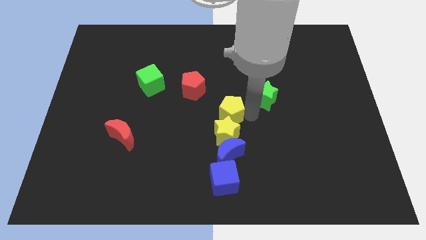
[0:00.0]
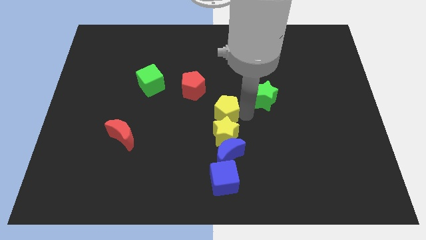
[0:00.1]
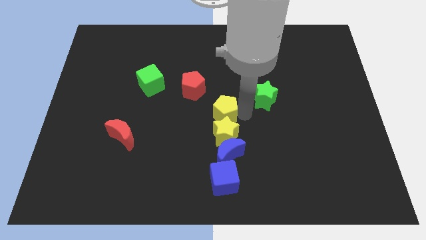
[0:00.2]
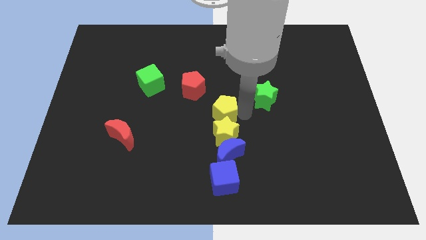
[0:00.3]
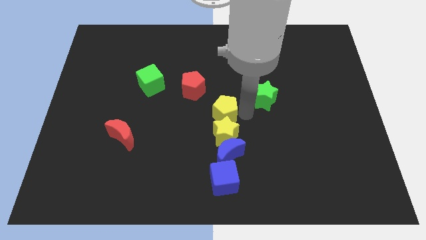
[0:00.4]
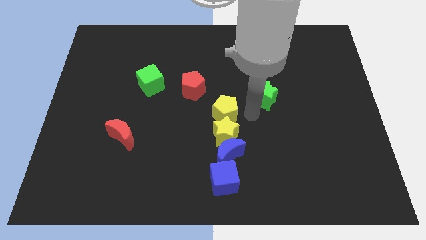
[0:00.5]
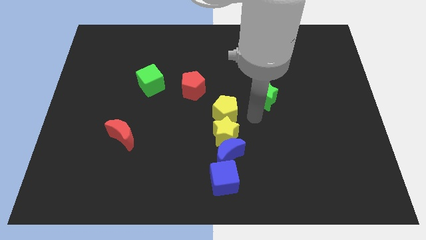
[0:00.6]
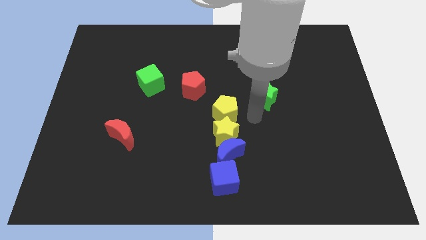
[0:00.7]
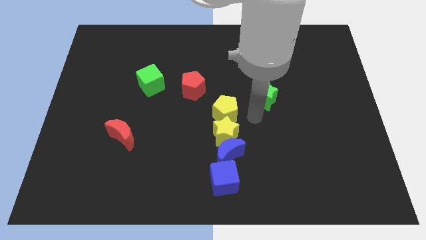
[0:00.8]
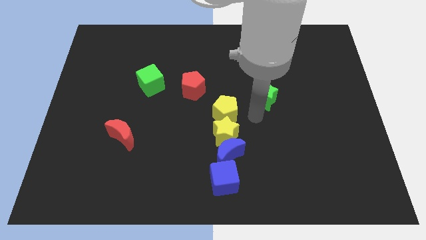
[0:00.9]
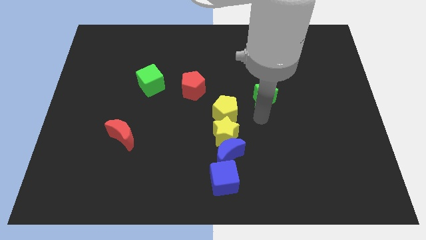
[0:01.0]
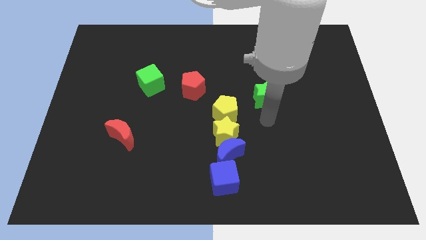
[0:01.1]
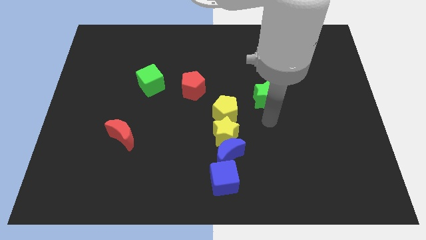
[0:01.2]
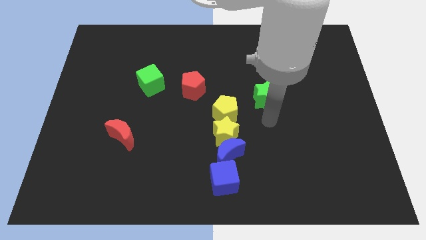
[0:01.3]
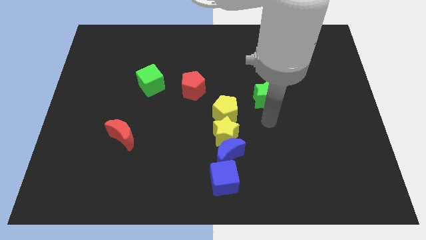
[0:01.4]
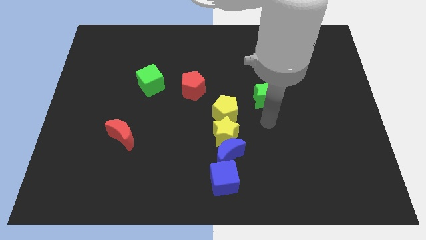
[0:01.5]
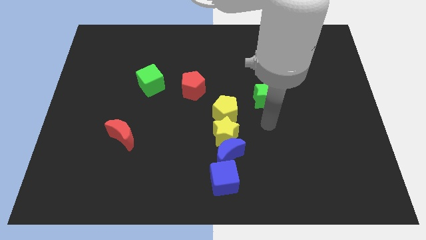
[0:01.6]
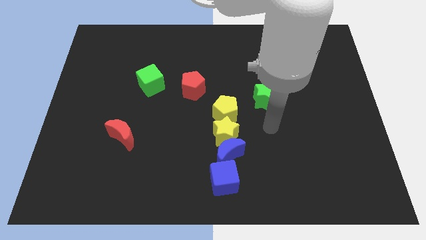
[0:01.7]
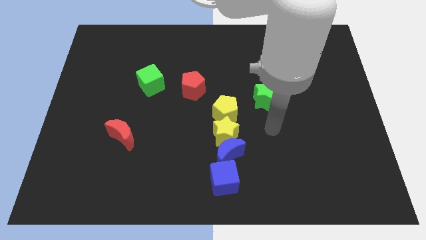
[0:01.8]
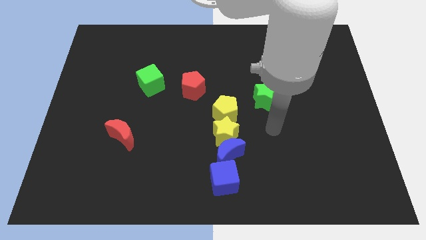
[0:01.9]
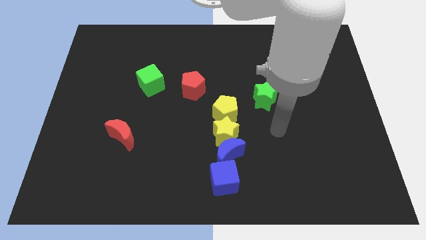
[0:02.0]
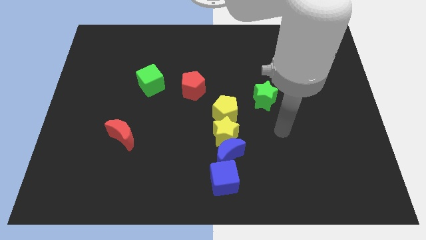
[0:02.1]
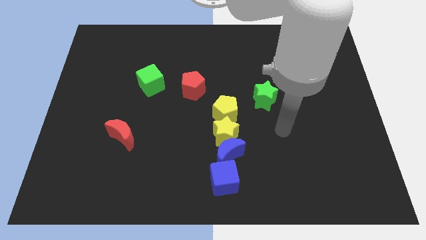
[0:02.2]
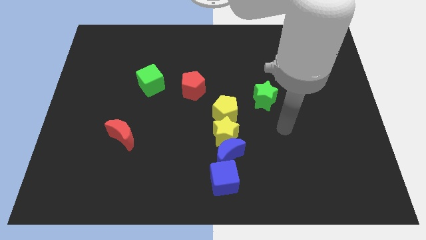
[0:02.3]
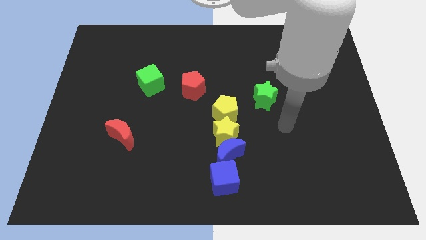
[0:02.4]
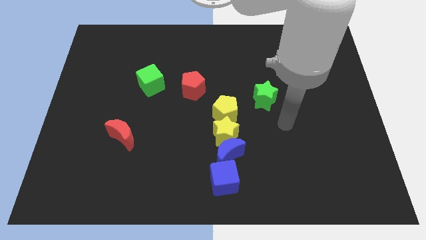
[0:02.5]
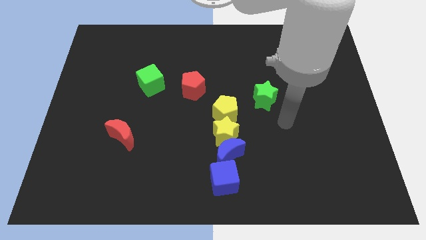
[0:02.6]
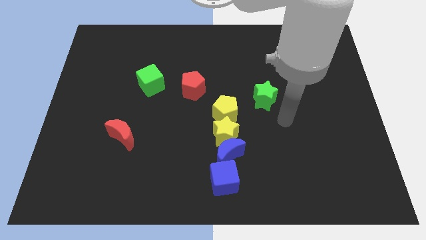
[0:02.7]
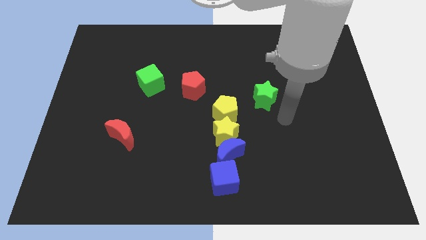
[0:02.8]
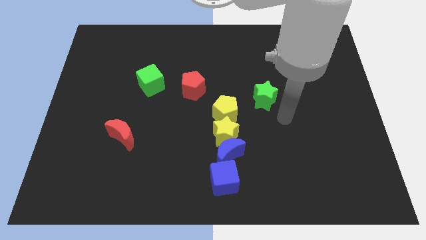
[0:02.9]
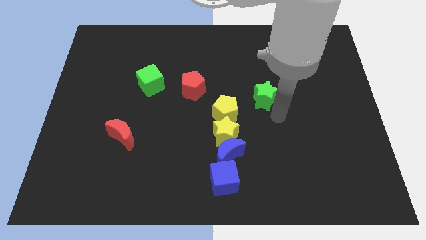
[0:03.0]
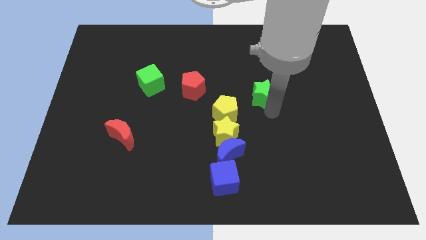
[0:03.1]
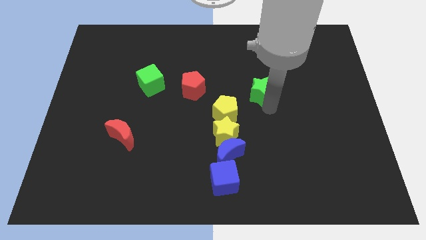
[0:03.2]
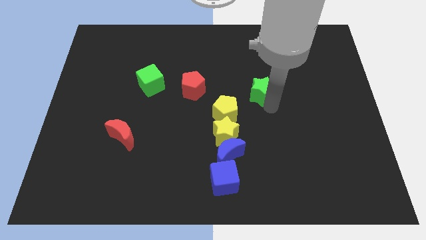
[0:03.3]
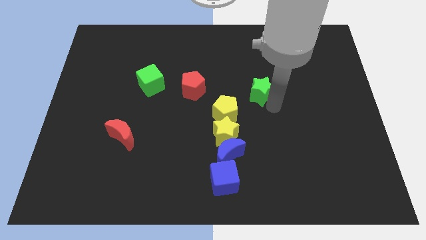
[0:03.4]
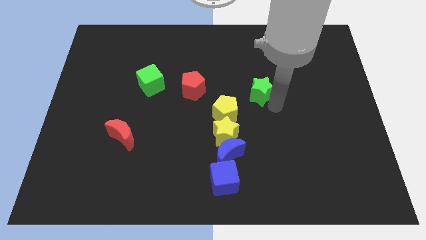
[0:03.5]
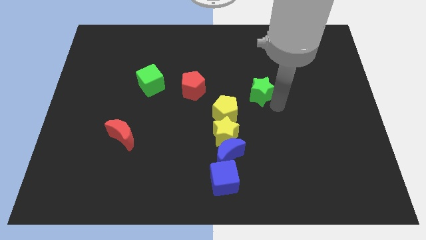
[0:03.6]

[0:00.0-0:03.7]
move your hand to the right of the green star

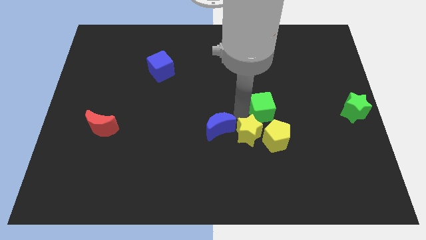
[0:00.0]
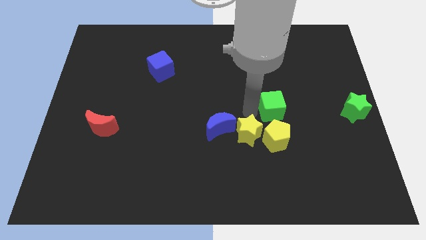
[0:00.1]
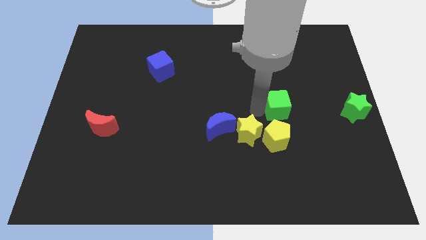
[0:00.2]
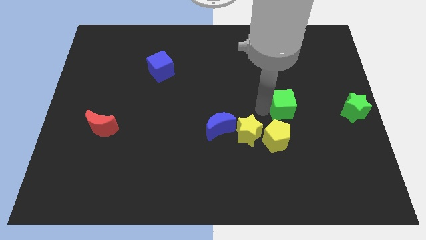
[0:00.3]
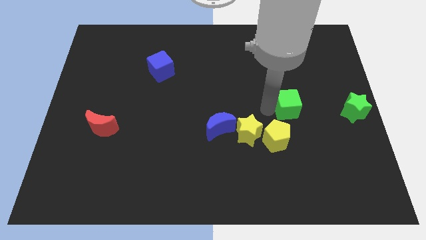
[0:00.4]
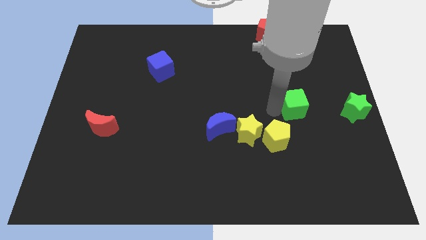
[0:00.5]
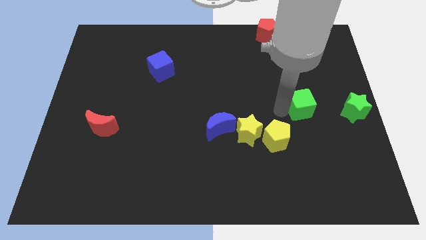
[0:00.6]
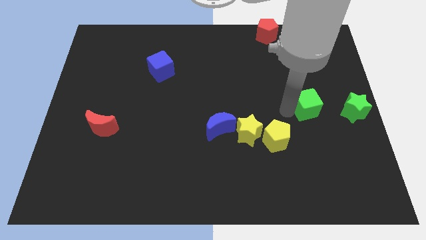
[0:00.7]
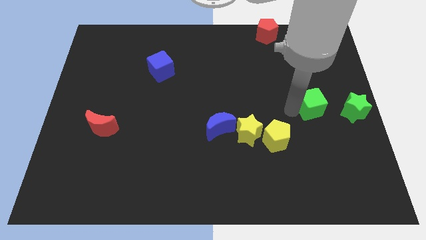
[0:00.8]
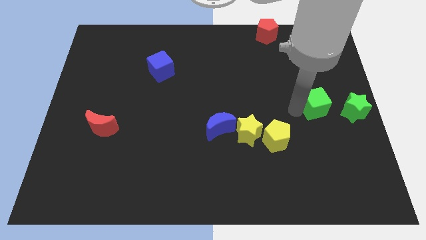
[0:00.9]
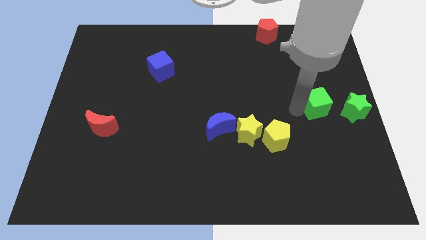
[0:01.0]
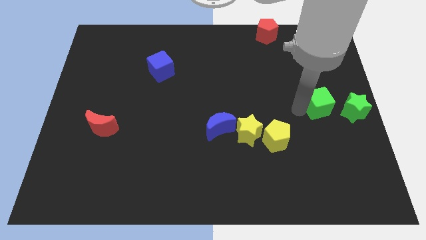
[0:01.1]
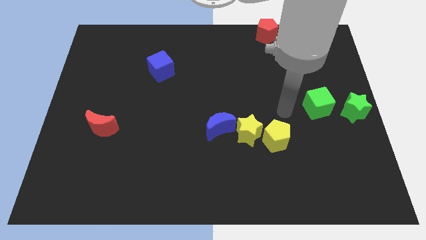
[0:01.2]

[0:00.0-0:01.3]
slide the green cube close to the green star

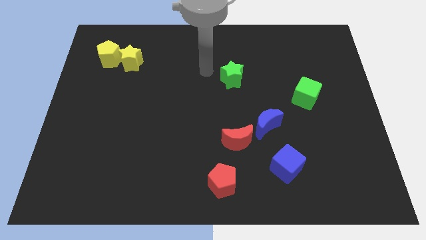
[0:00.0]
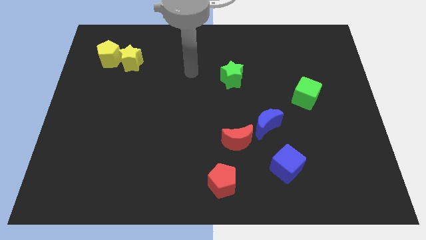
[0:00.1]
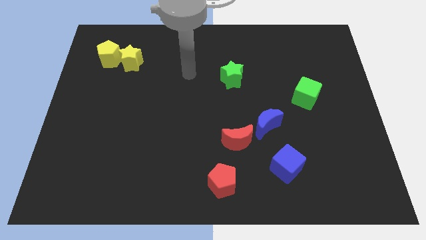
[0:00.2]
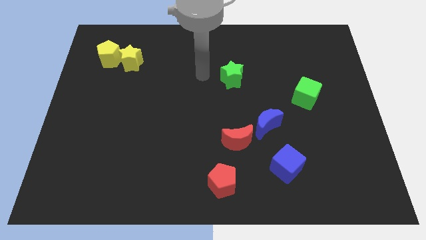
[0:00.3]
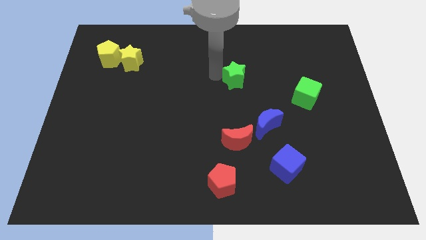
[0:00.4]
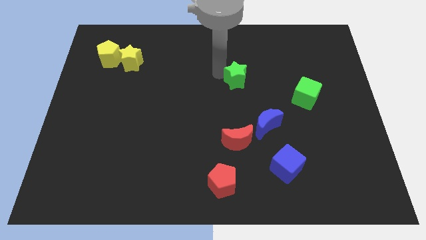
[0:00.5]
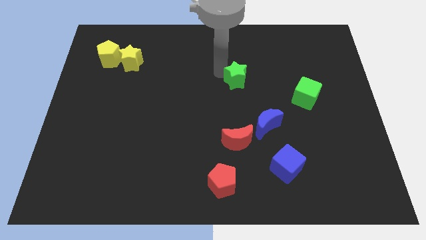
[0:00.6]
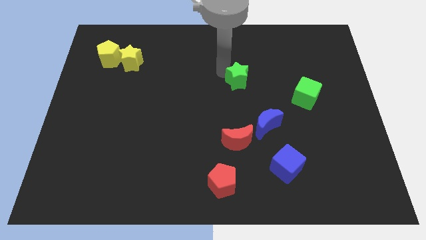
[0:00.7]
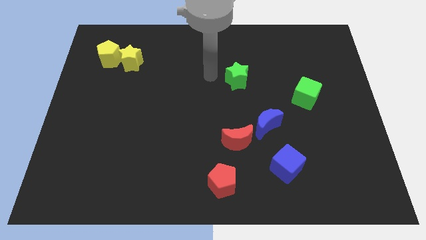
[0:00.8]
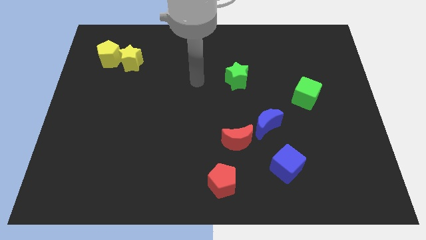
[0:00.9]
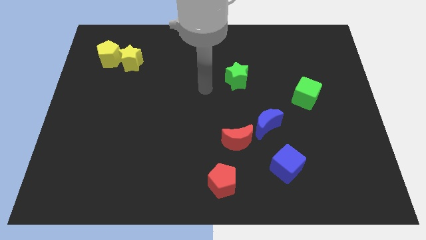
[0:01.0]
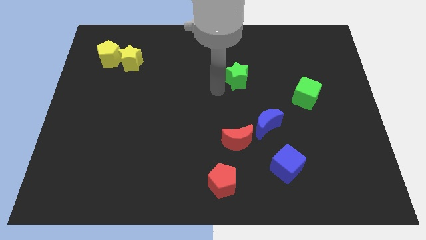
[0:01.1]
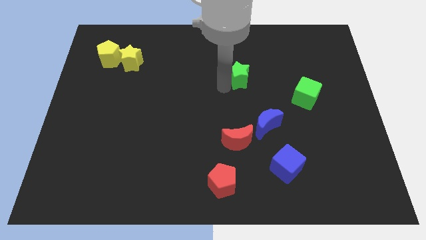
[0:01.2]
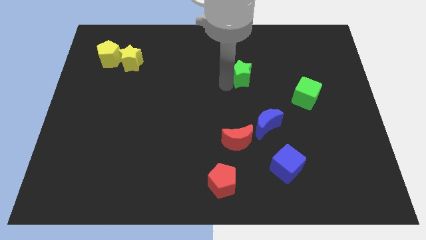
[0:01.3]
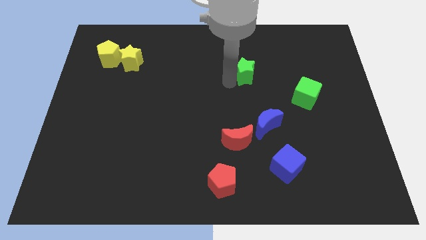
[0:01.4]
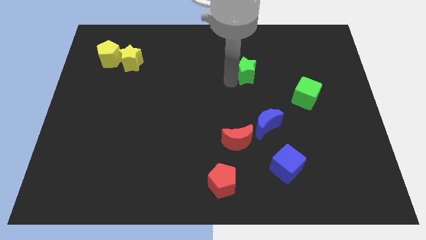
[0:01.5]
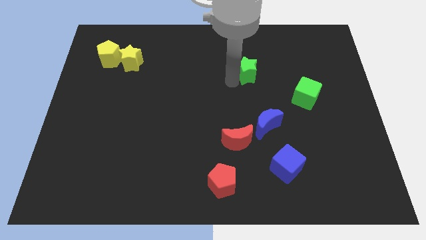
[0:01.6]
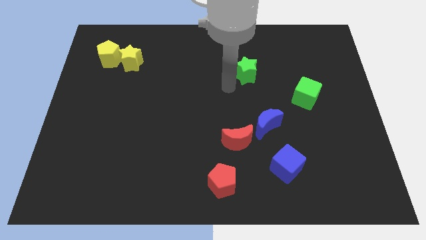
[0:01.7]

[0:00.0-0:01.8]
push the green star towards right

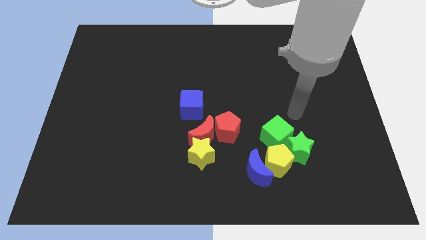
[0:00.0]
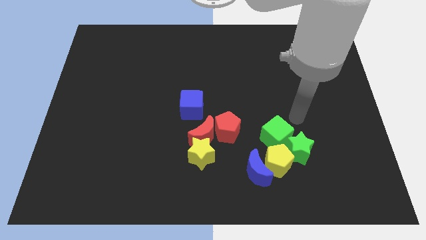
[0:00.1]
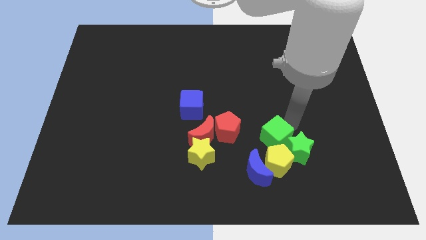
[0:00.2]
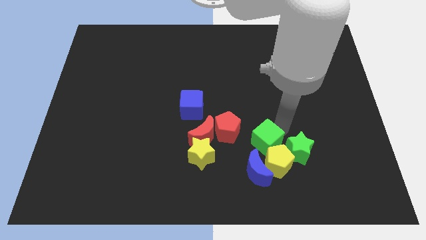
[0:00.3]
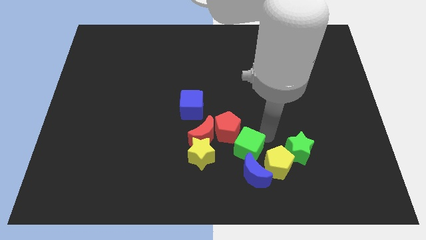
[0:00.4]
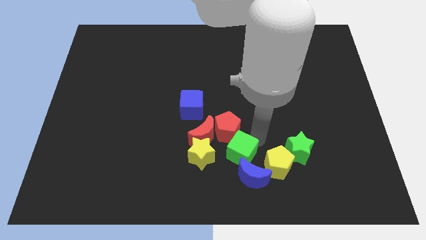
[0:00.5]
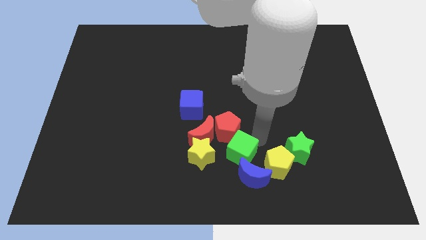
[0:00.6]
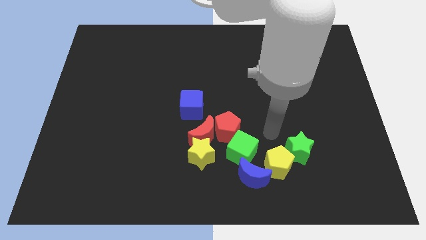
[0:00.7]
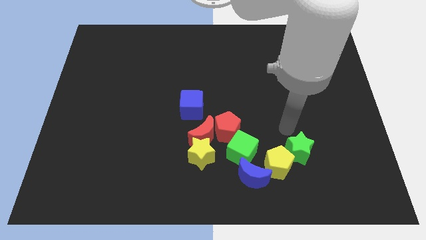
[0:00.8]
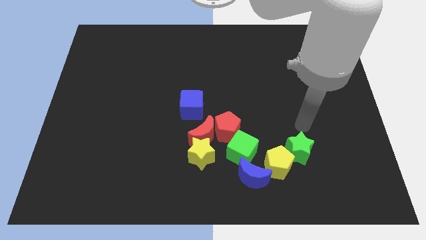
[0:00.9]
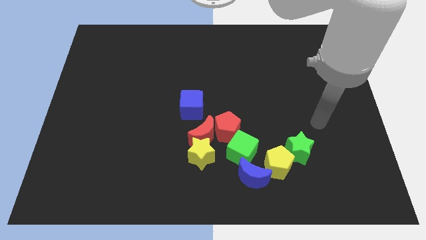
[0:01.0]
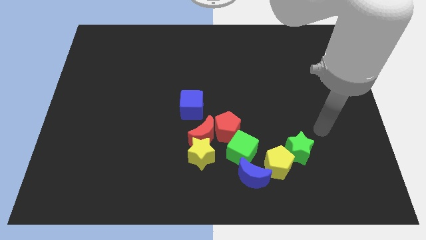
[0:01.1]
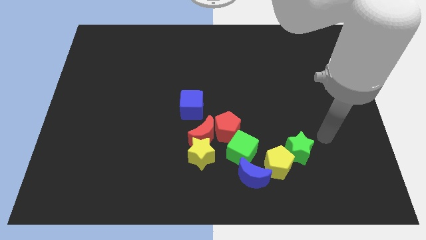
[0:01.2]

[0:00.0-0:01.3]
place the green cube in between the red pentagon and blue crescent to form a diagnoal line

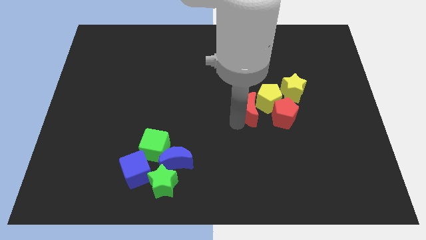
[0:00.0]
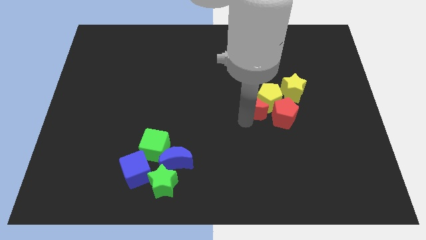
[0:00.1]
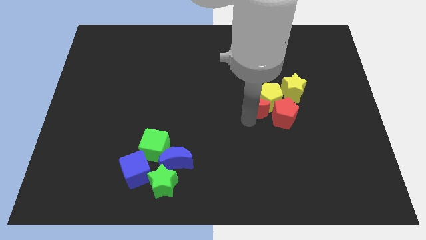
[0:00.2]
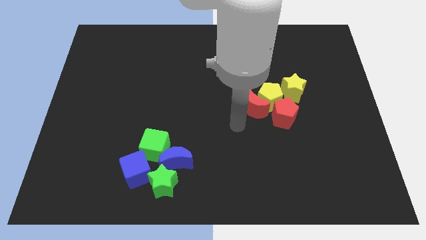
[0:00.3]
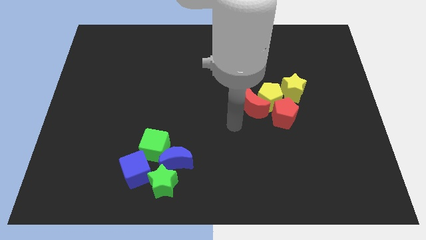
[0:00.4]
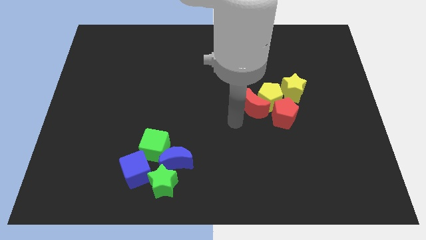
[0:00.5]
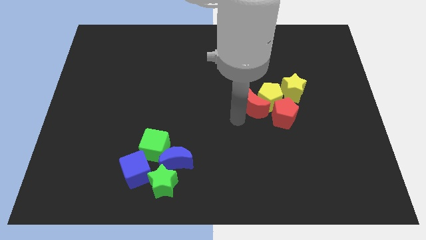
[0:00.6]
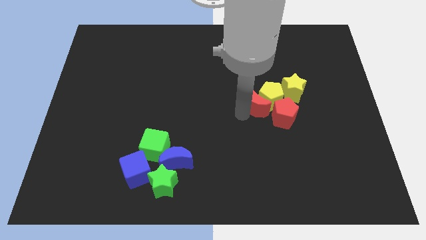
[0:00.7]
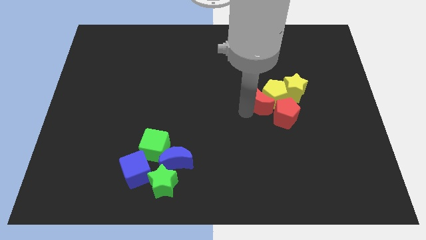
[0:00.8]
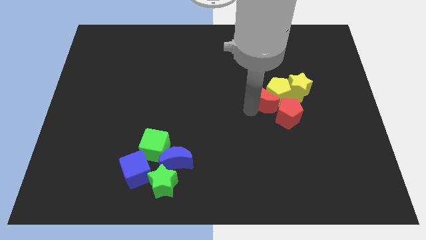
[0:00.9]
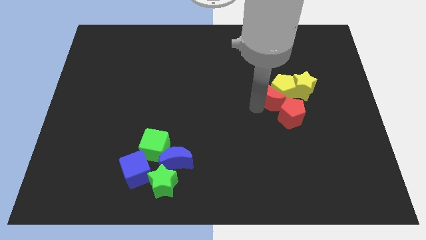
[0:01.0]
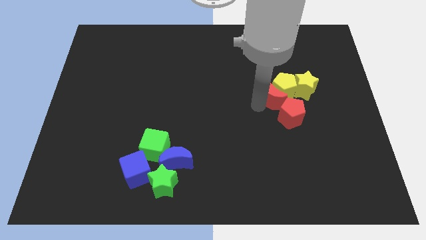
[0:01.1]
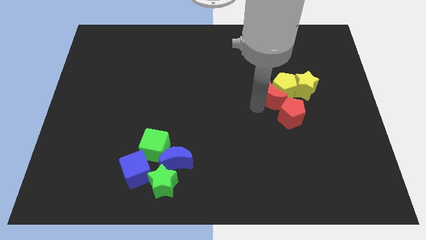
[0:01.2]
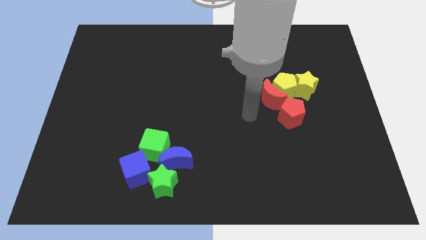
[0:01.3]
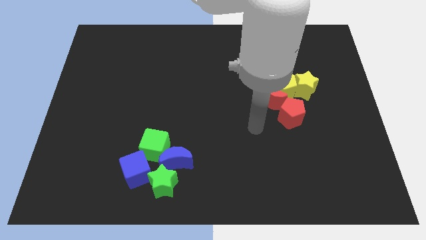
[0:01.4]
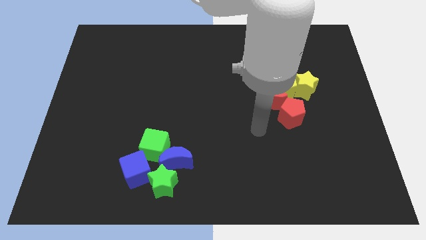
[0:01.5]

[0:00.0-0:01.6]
push the red crescent into the yellow pentagon from the left
